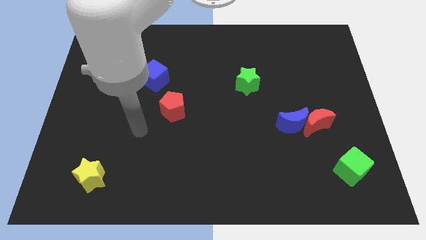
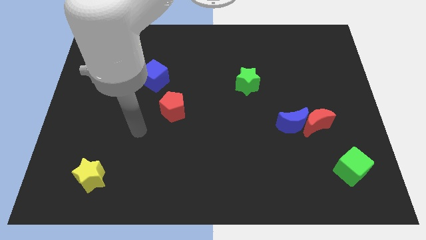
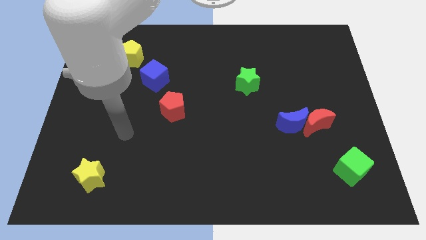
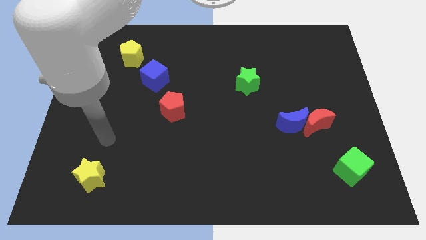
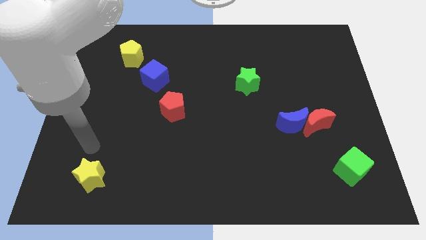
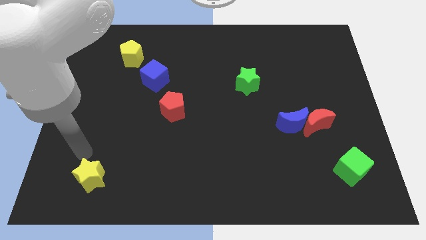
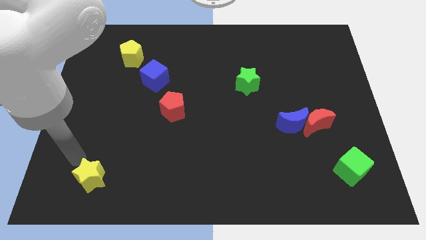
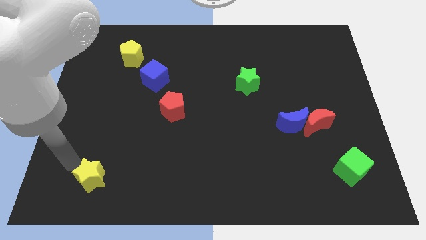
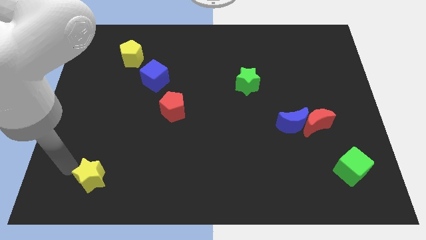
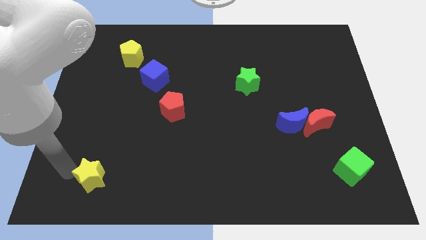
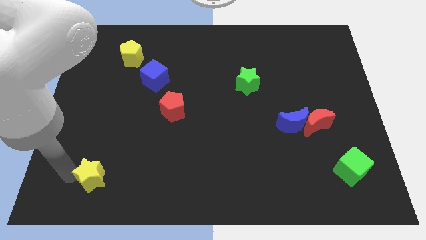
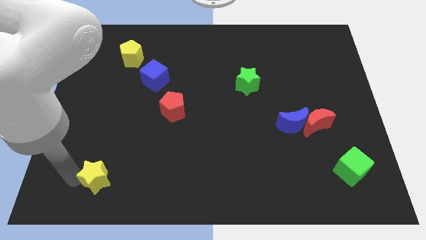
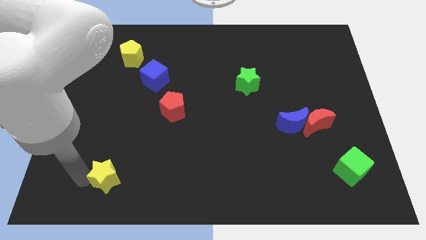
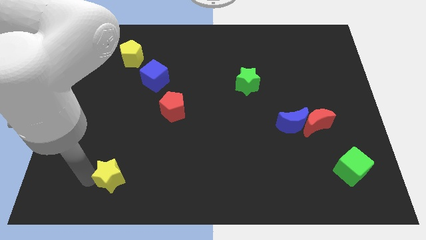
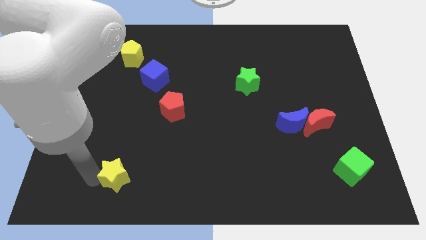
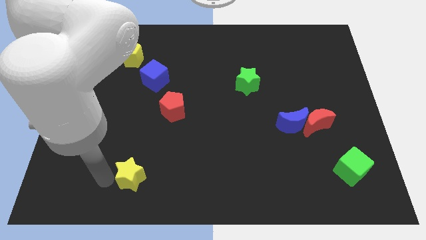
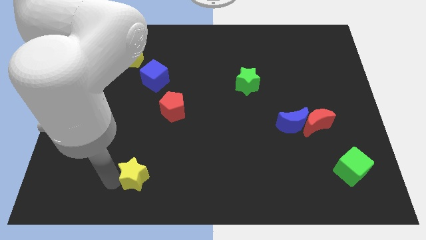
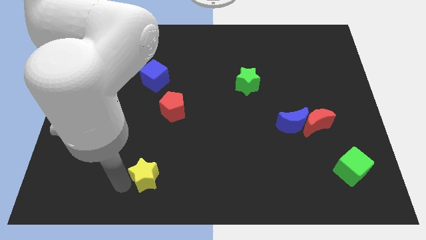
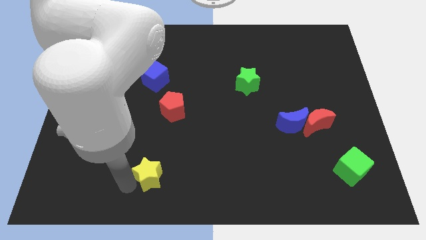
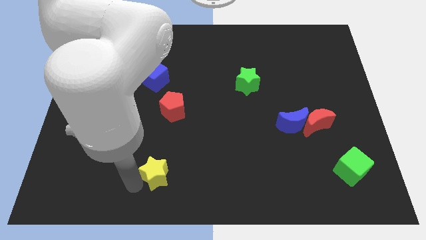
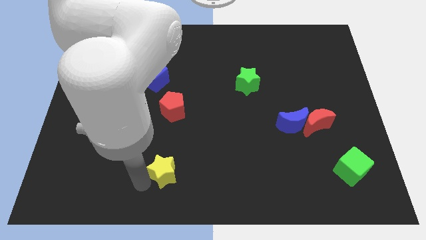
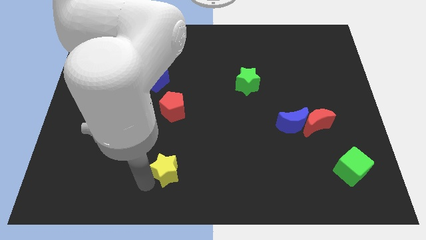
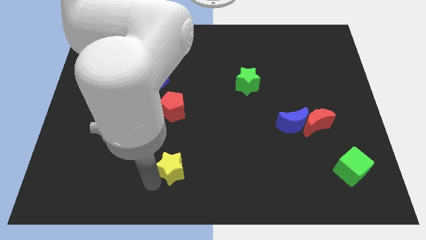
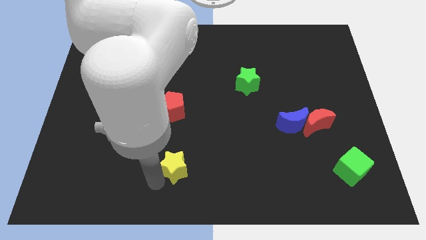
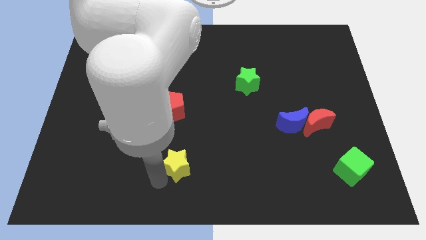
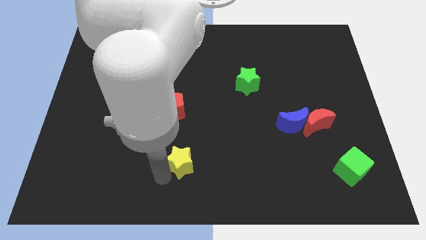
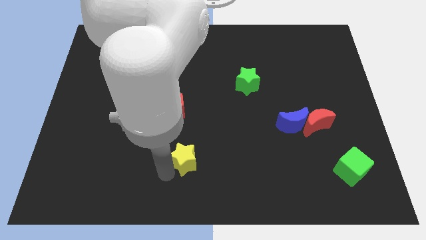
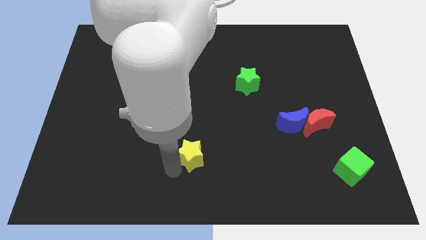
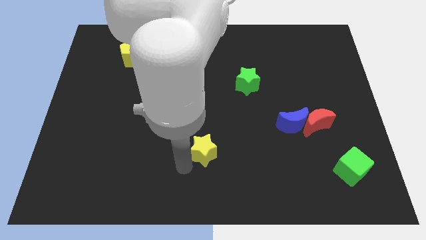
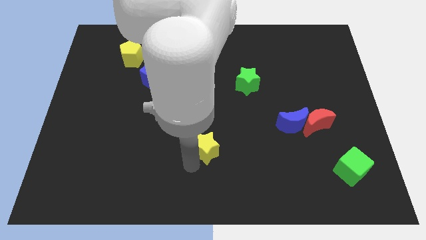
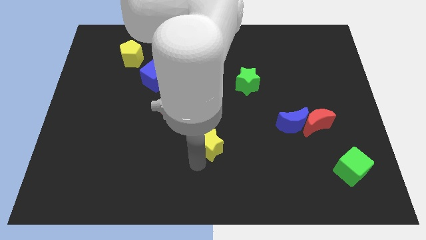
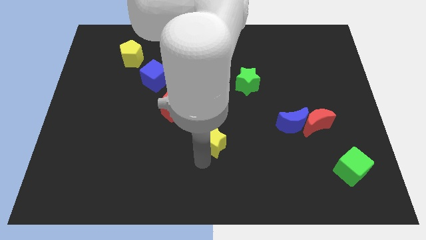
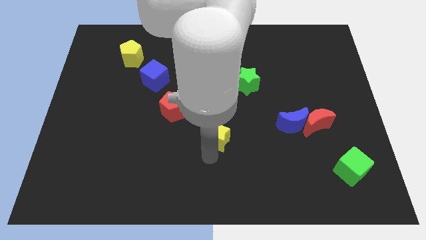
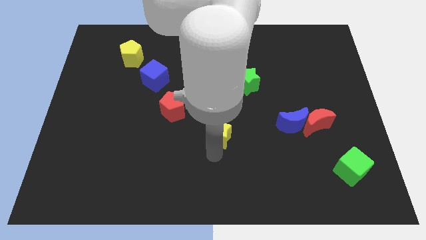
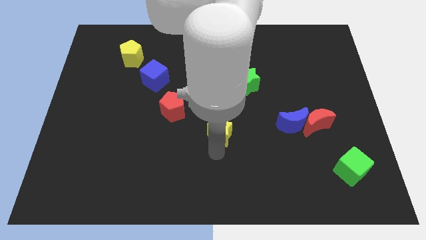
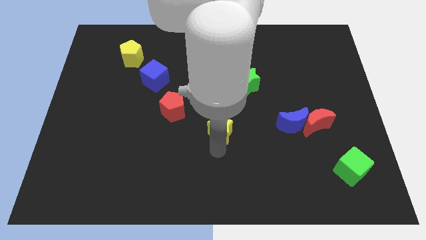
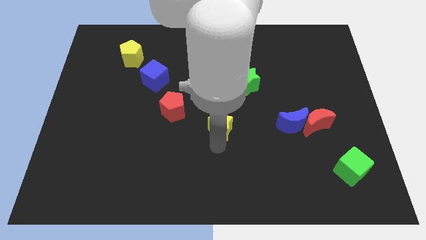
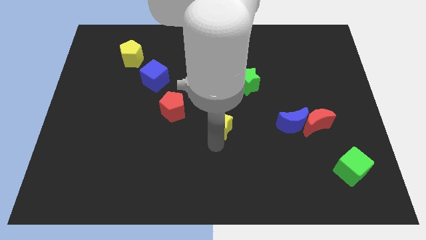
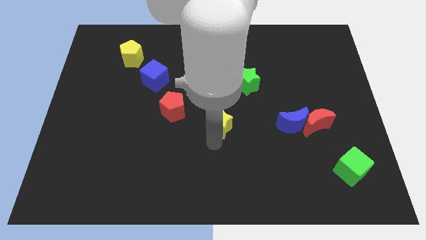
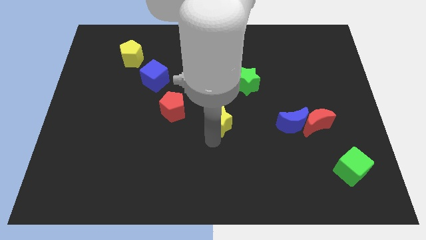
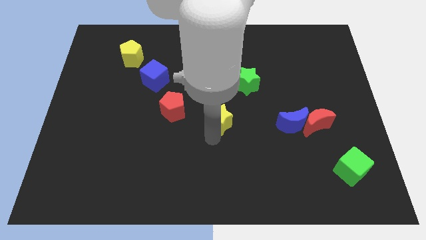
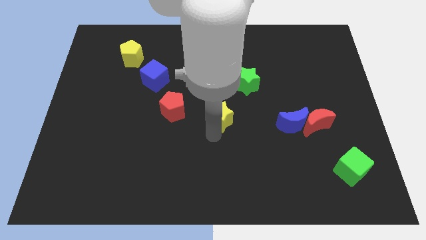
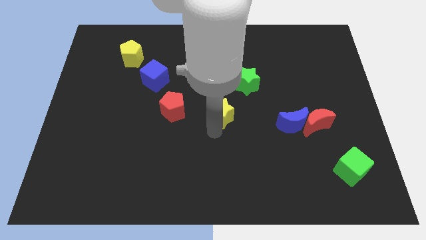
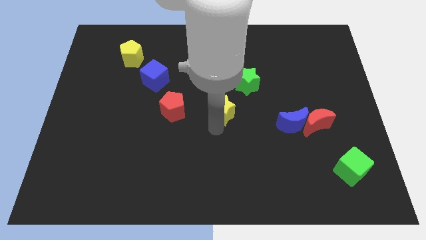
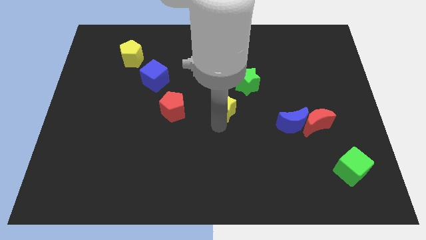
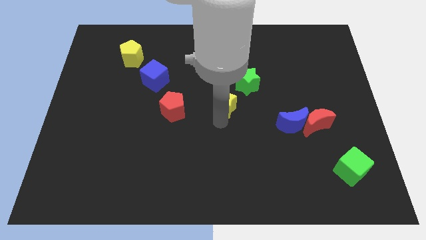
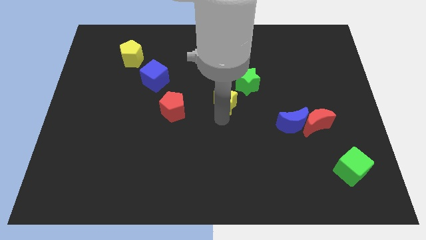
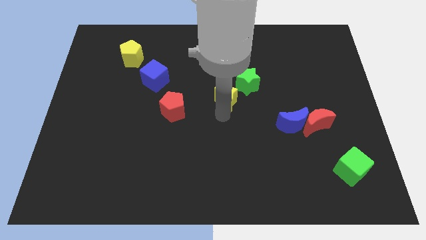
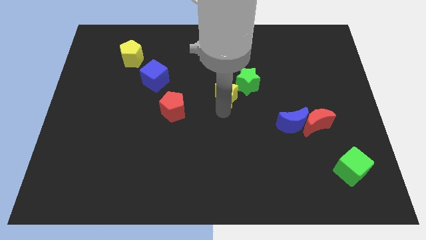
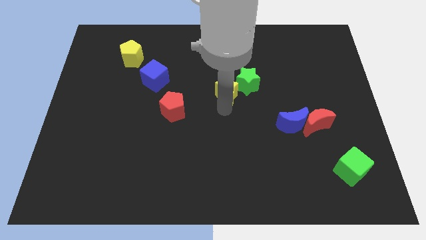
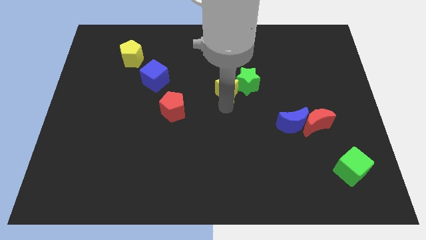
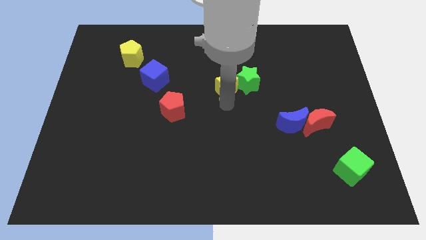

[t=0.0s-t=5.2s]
slide the yellow star close to the green star

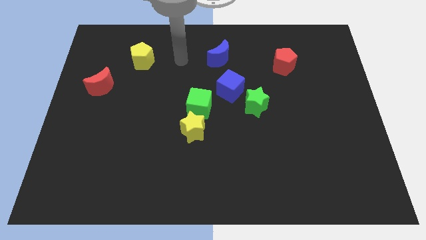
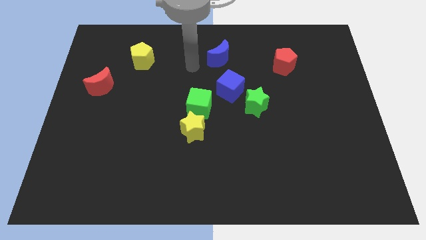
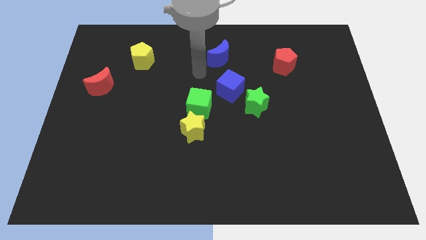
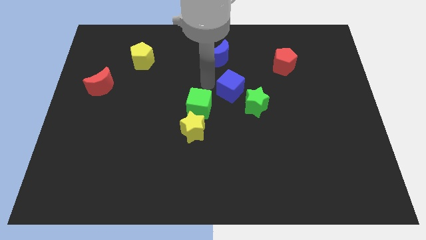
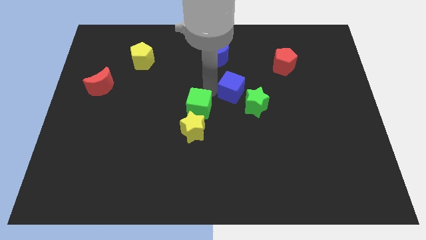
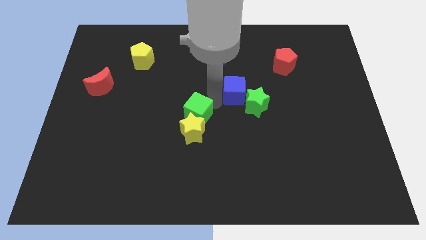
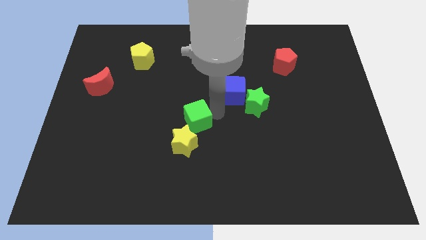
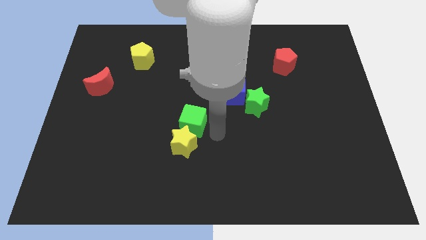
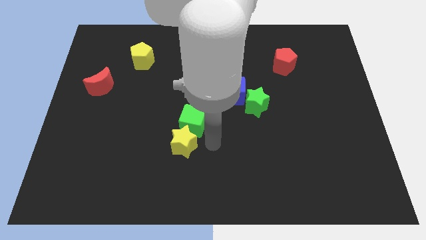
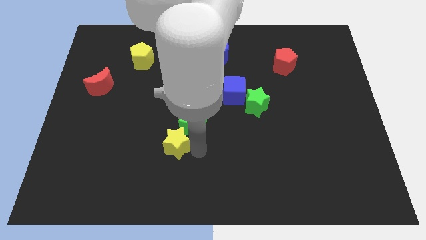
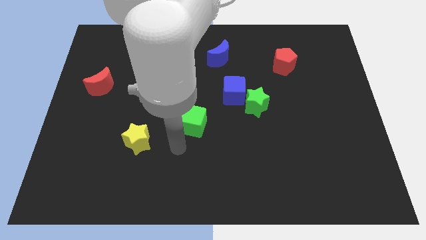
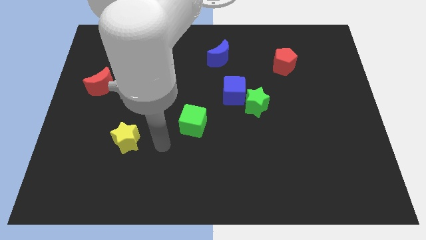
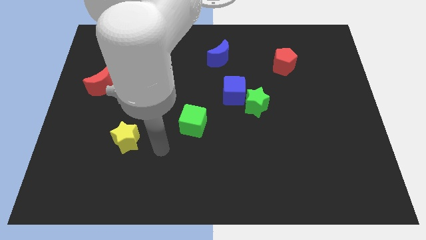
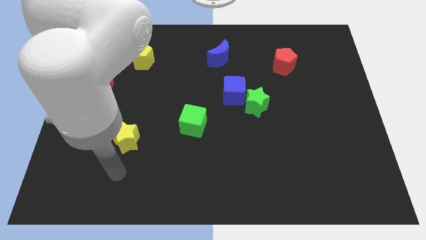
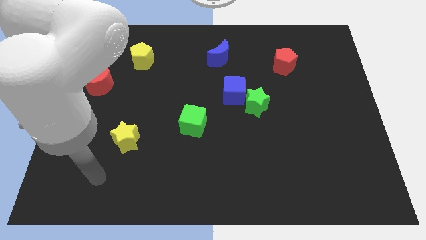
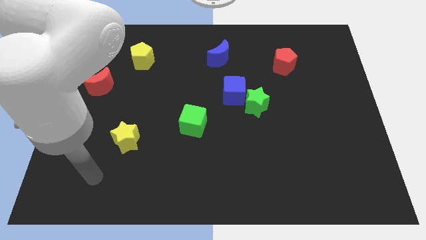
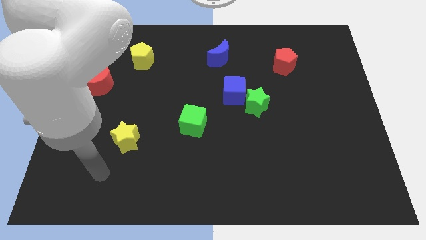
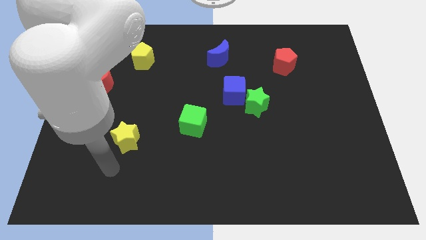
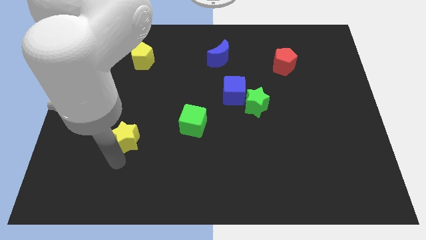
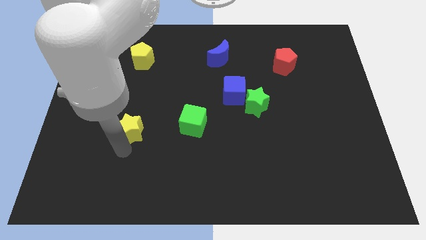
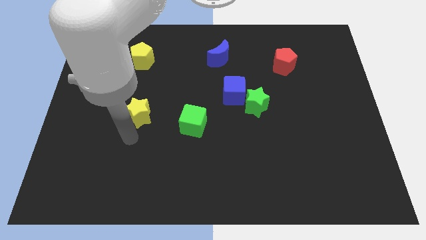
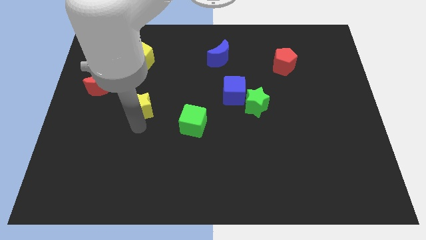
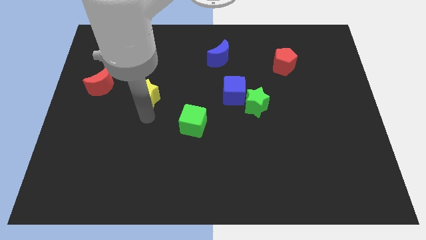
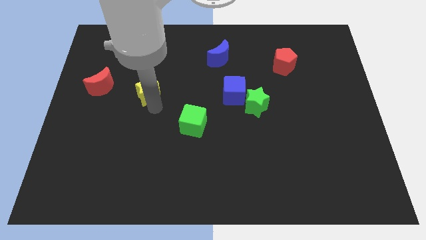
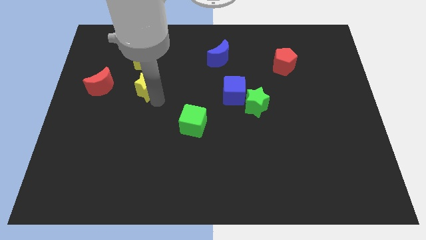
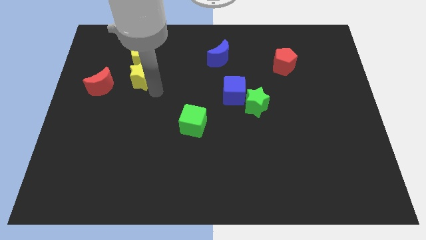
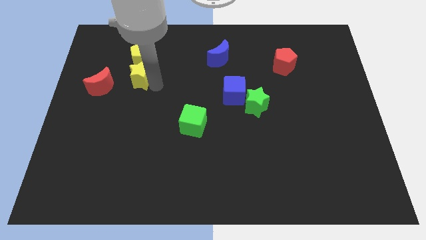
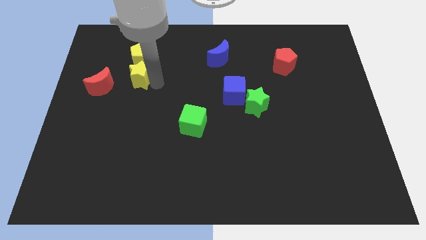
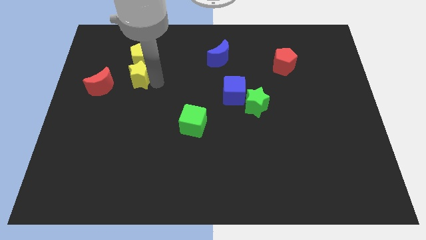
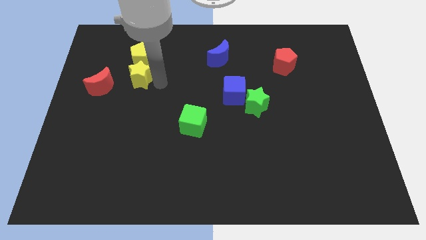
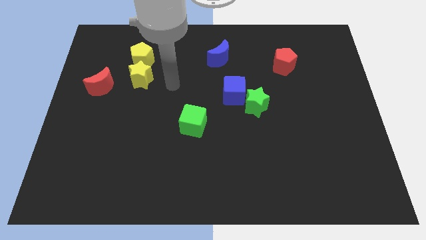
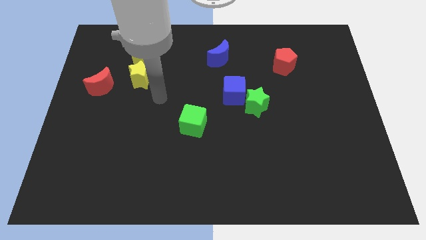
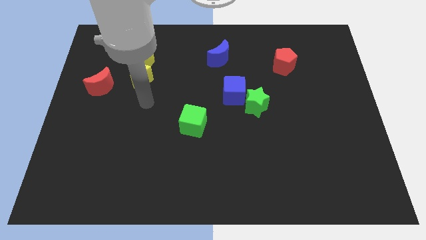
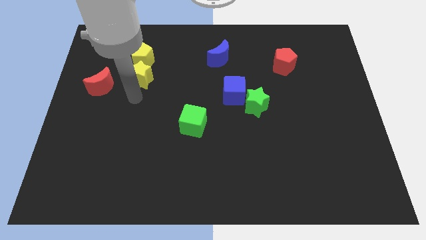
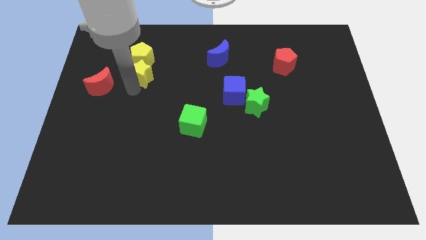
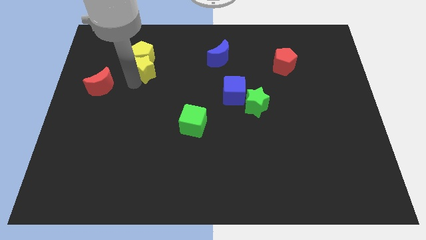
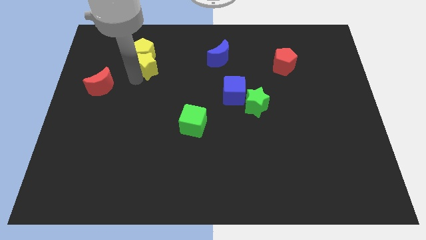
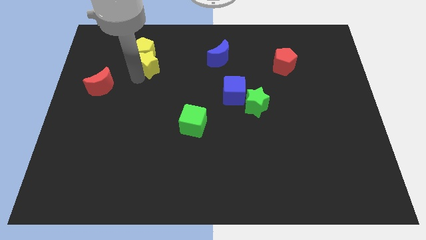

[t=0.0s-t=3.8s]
move the yellow star towards the yellow pentagon
